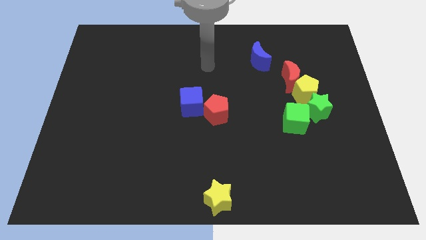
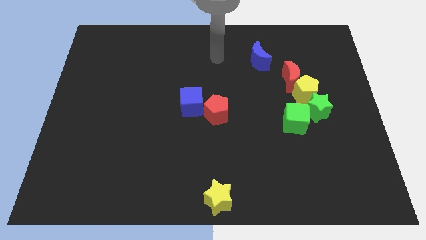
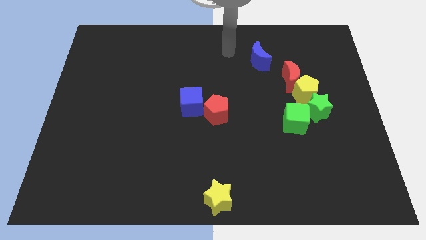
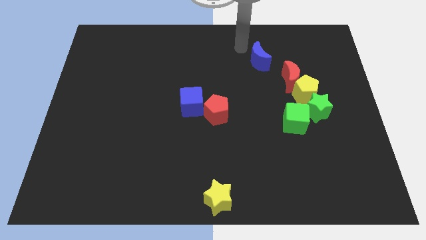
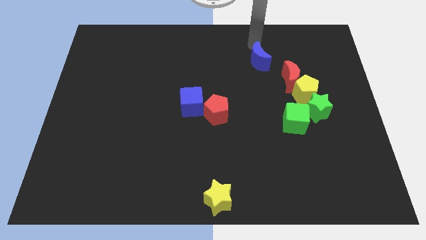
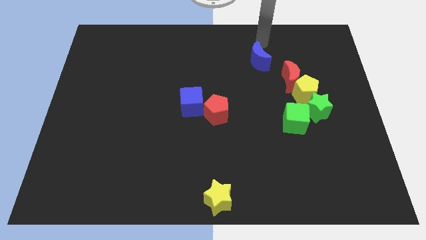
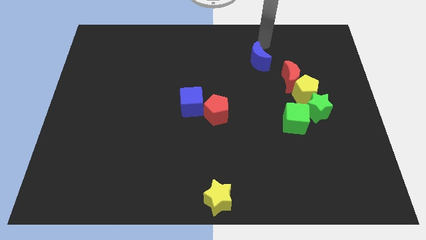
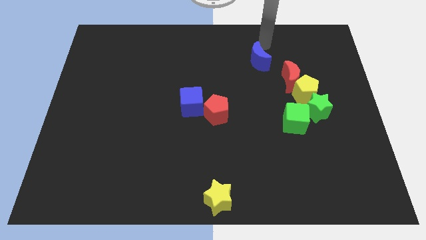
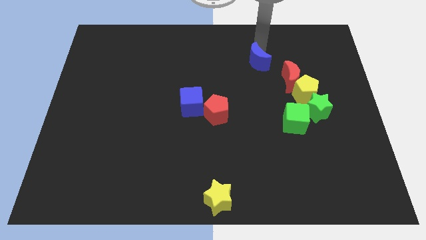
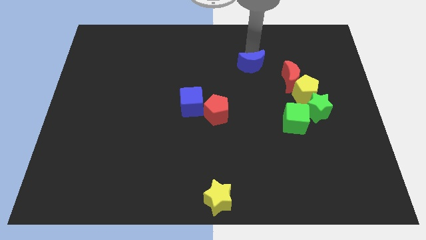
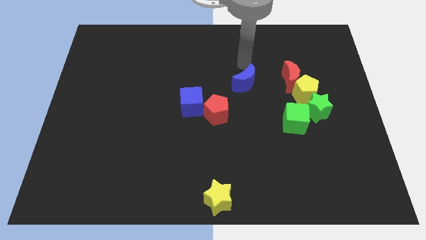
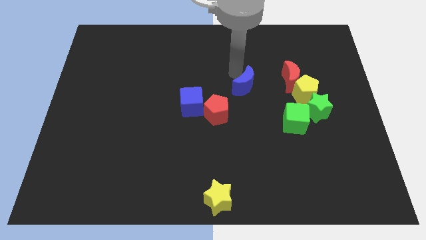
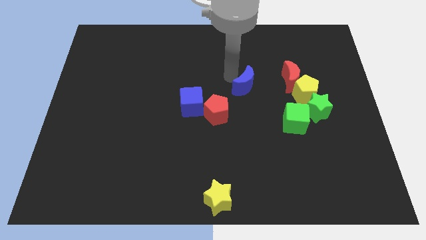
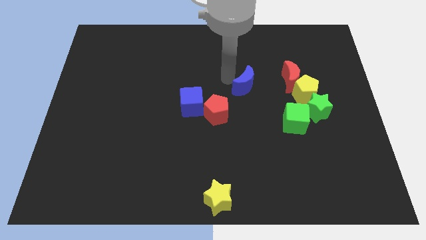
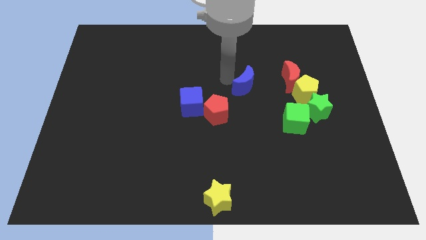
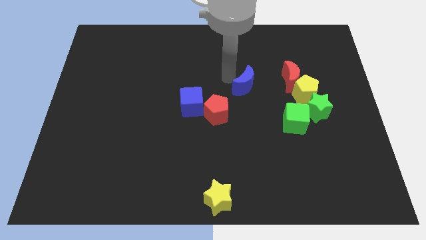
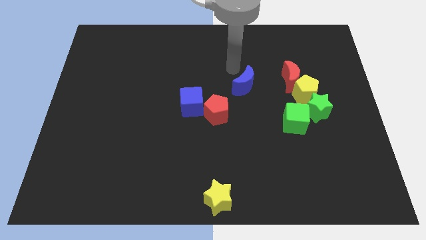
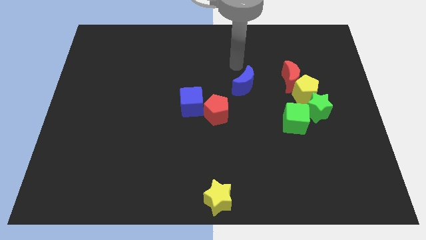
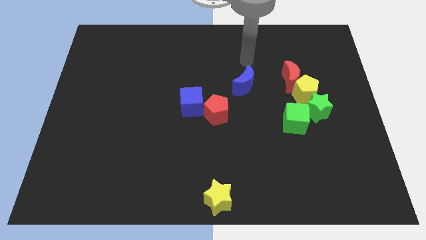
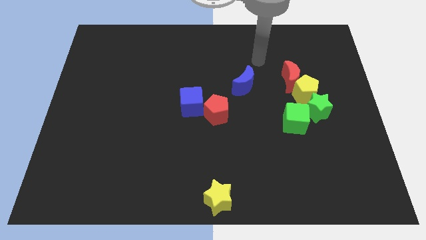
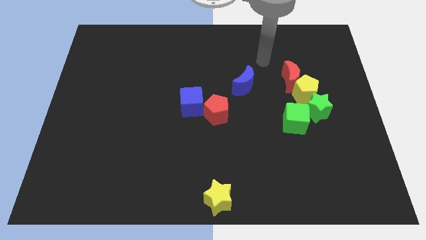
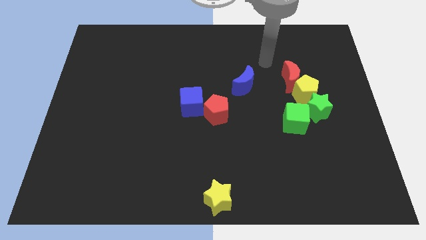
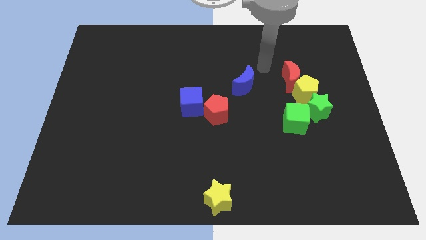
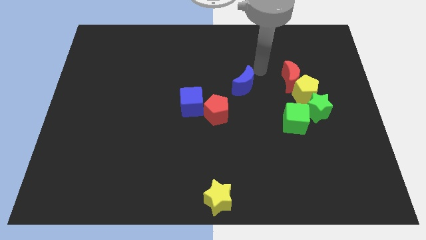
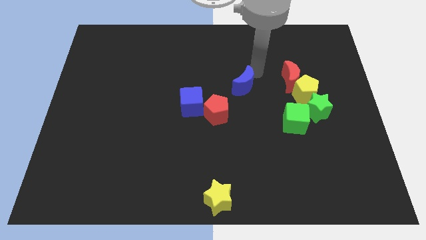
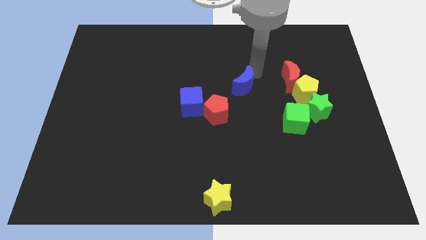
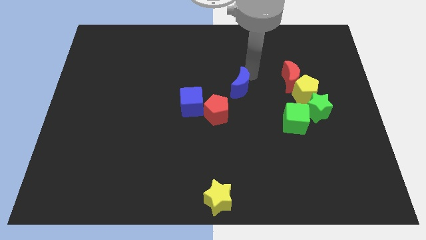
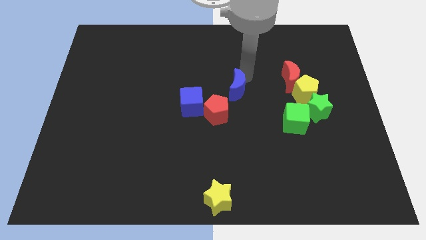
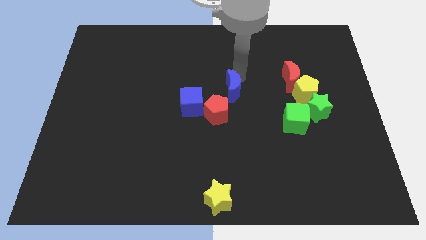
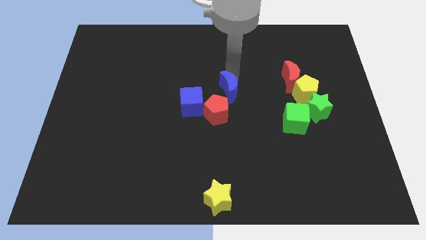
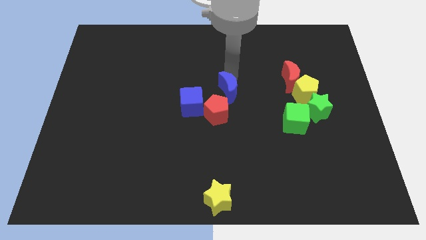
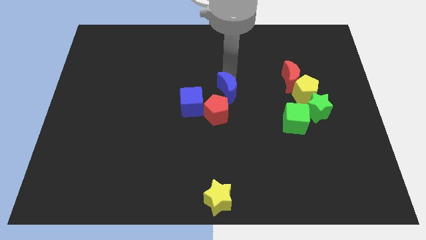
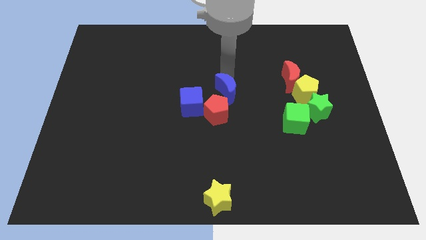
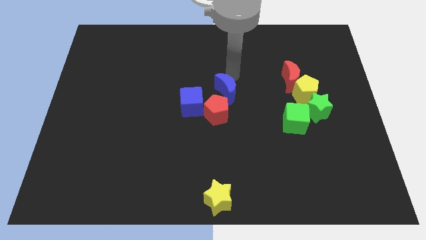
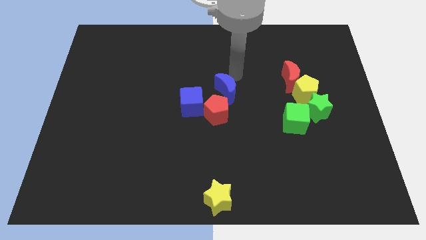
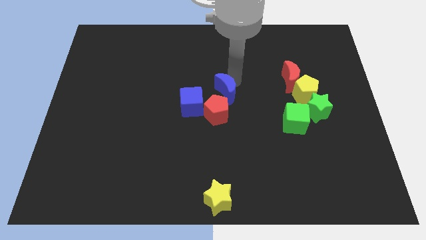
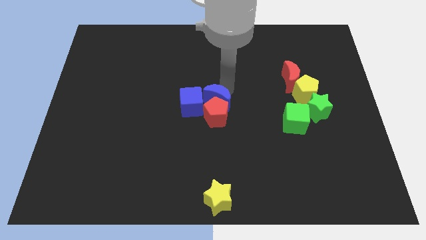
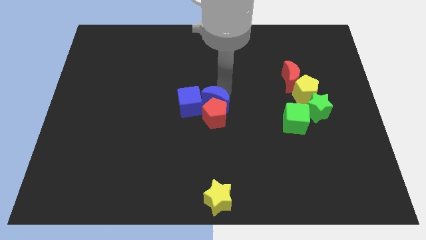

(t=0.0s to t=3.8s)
push the blue moon towards the red pentagon

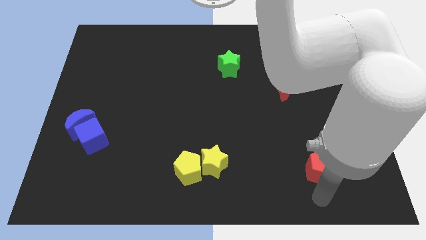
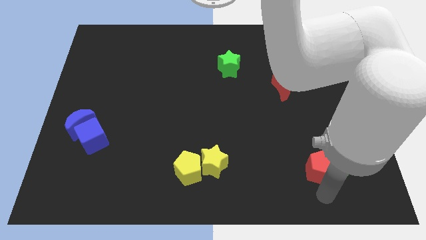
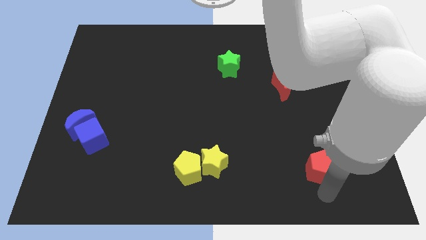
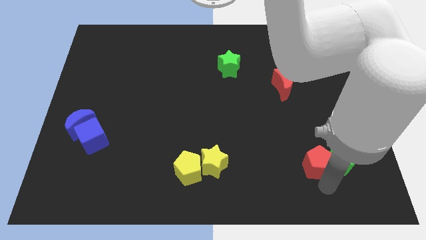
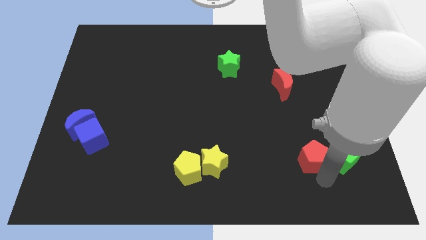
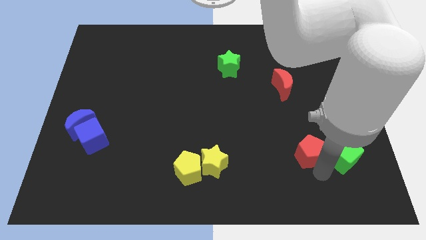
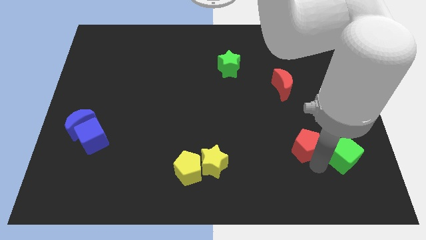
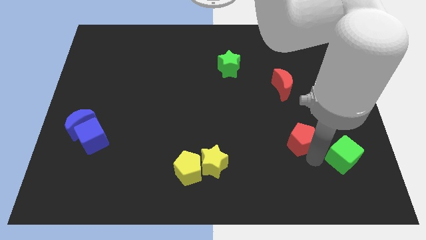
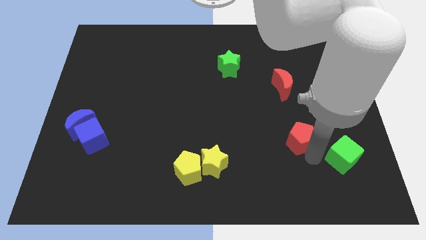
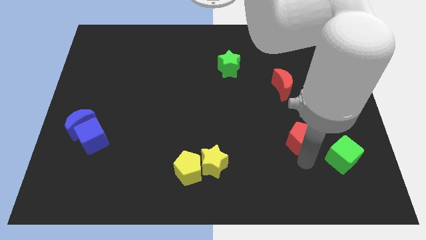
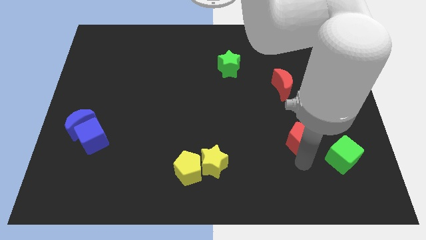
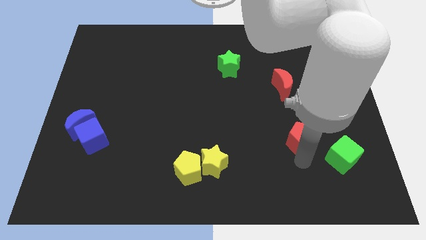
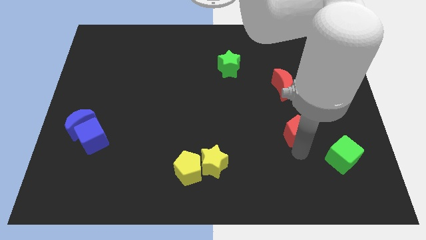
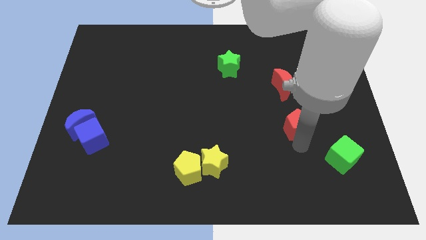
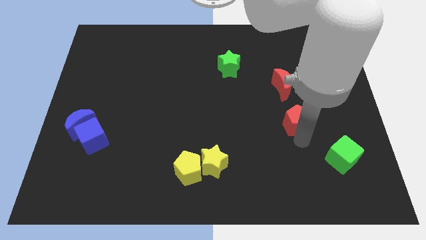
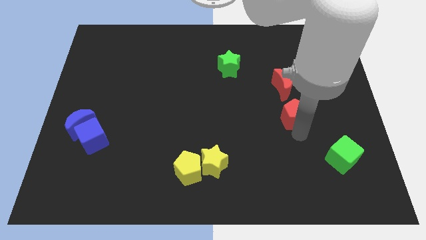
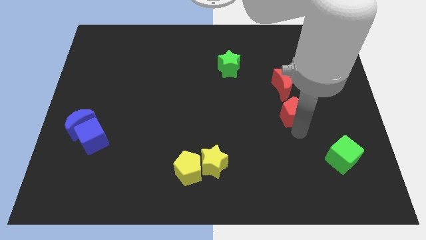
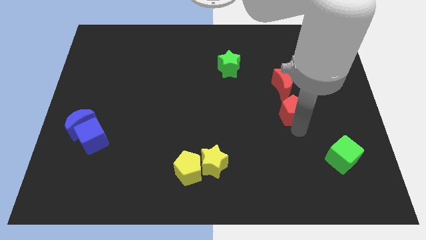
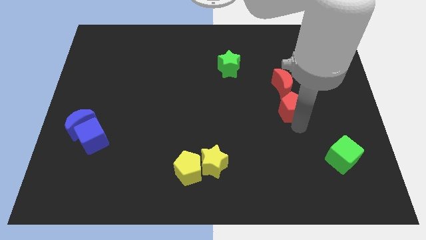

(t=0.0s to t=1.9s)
push the red pentagon to the bottom of the red crescent

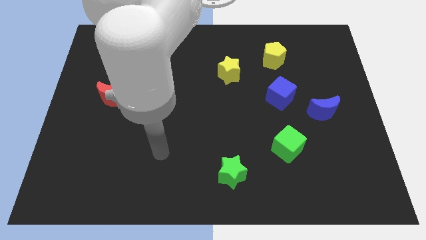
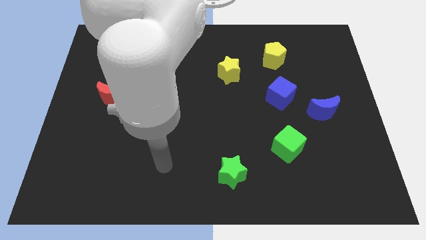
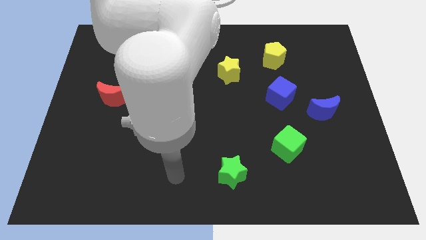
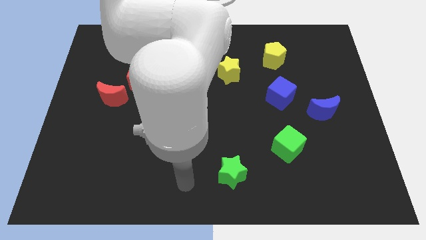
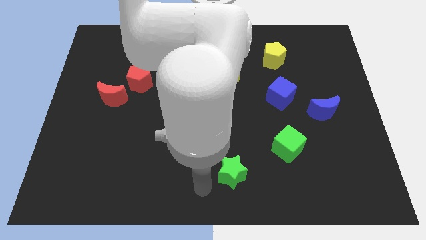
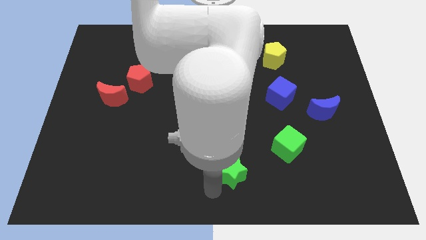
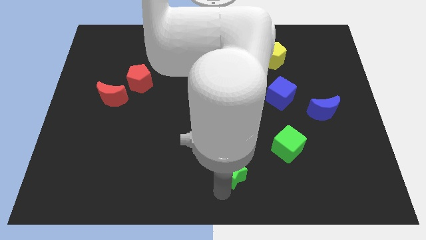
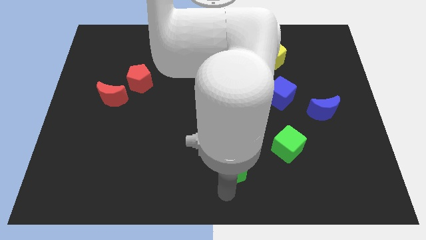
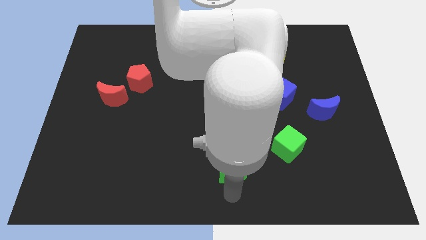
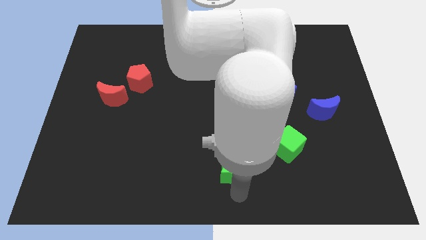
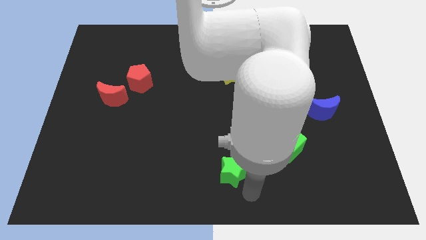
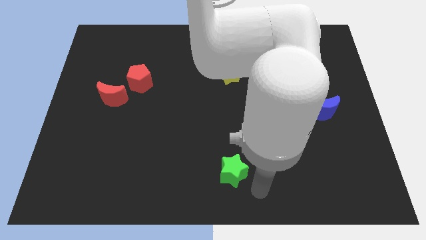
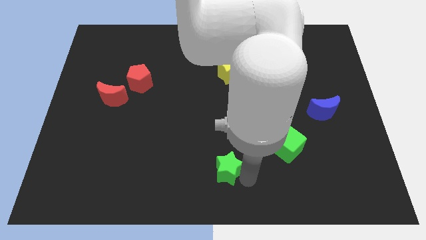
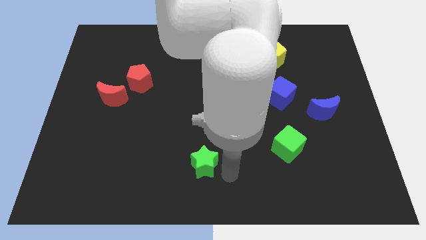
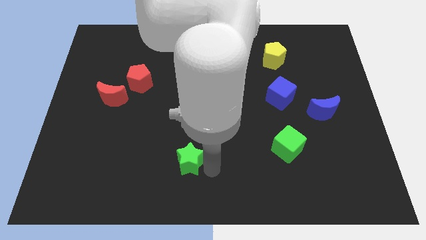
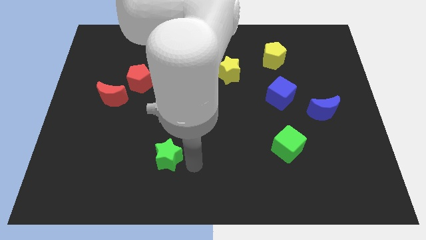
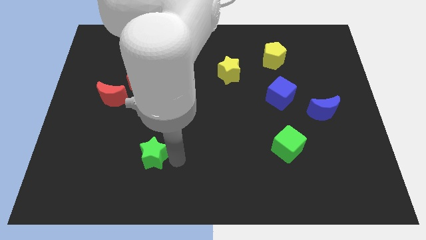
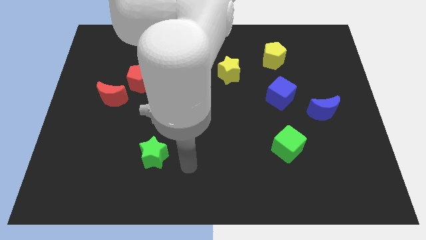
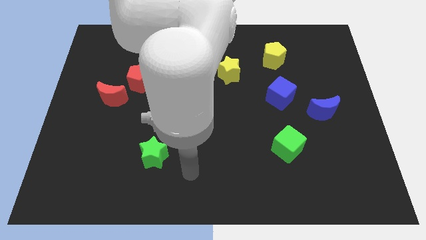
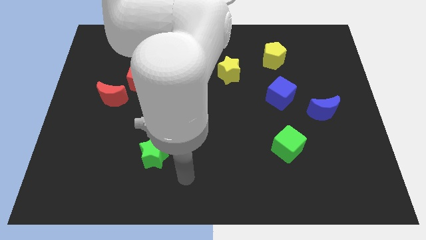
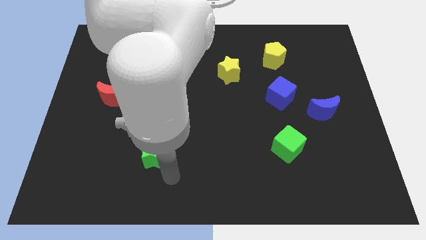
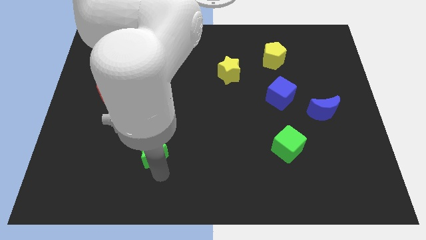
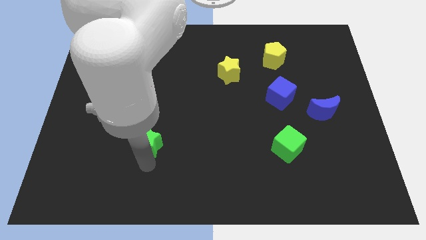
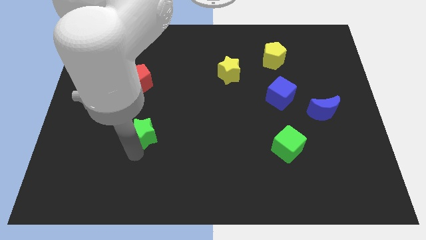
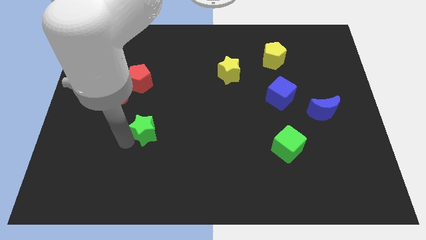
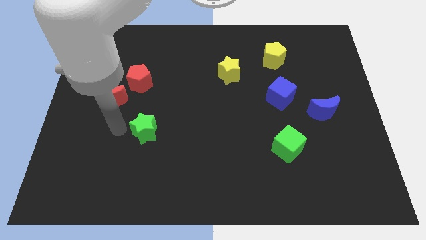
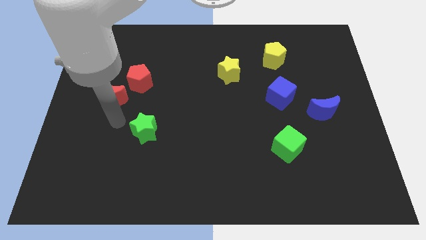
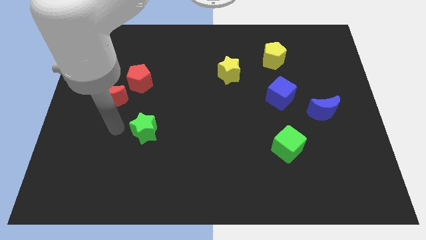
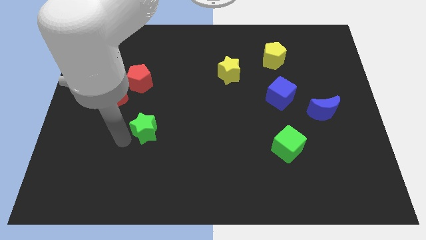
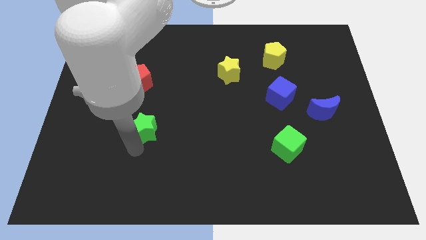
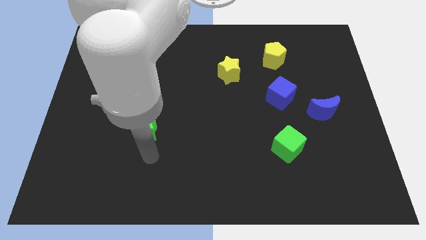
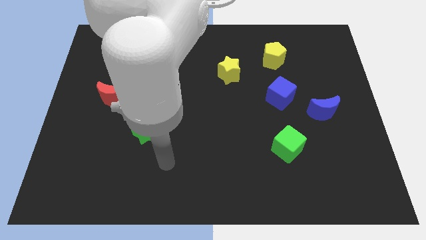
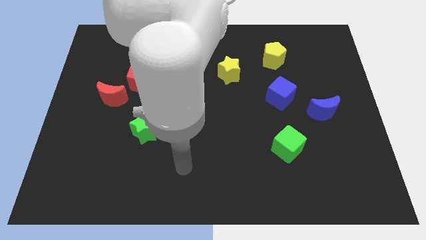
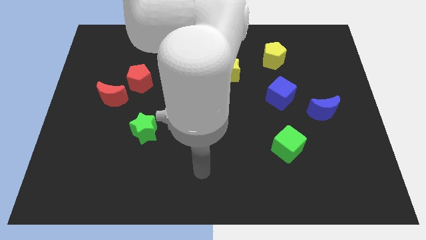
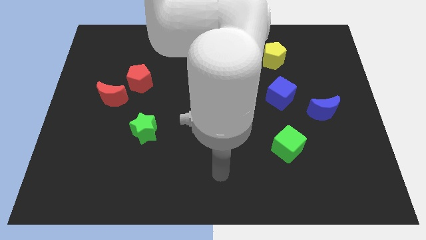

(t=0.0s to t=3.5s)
move green star below red blocks
